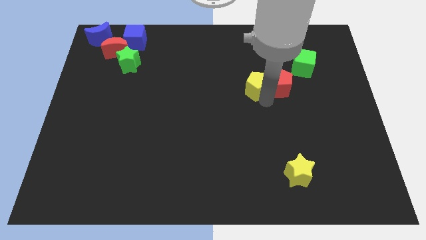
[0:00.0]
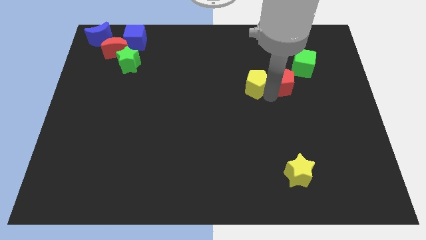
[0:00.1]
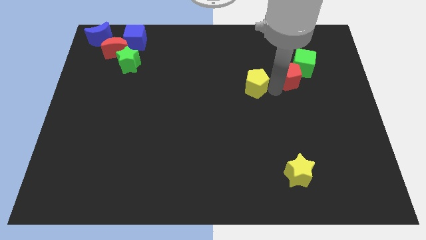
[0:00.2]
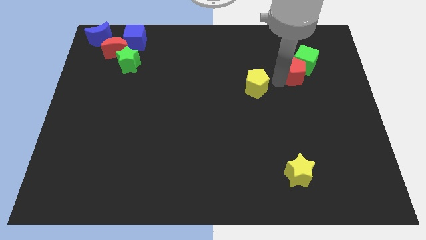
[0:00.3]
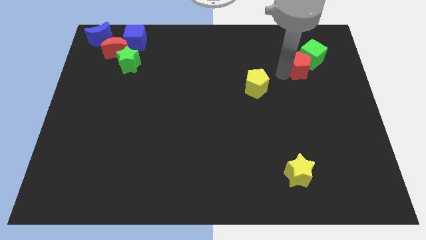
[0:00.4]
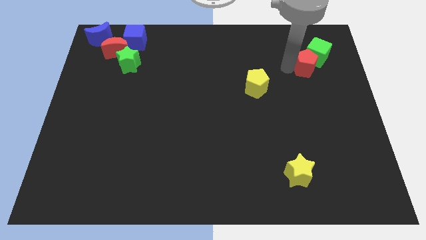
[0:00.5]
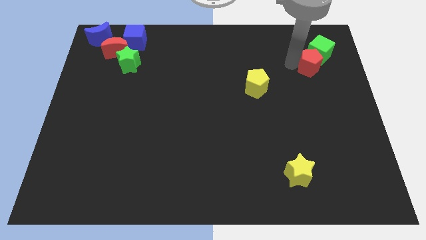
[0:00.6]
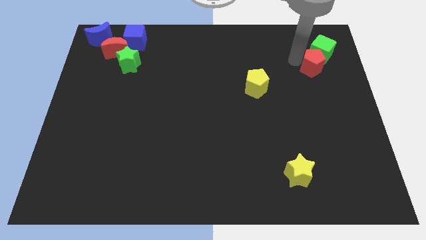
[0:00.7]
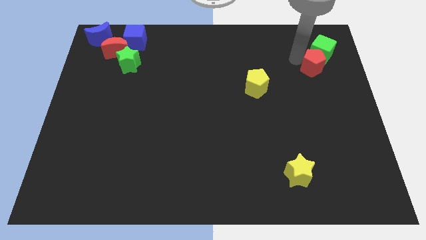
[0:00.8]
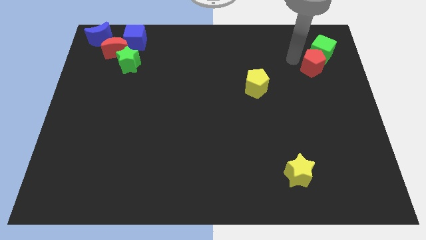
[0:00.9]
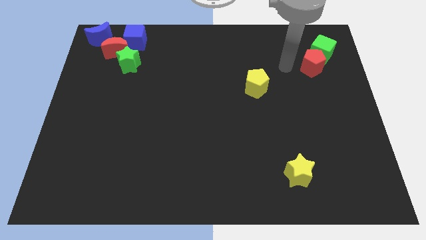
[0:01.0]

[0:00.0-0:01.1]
push red pentagon towards right upward

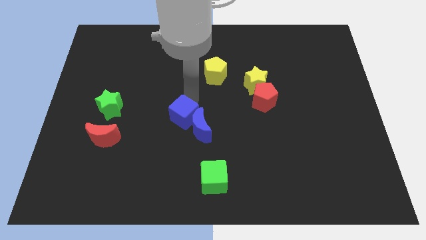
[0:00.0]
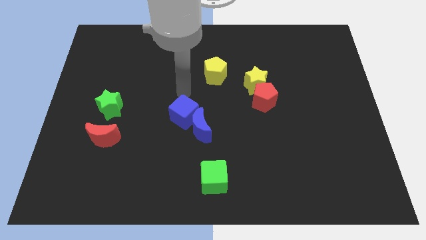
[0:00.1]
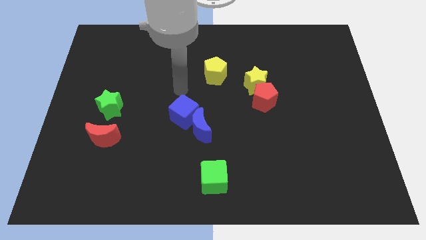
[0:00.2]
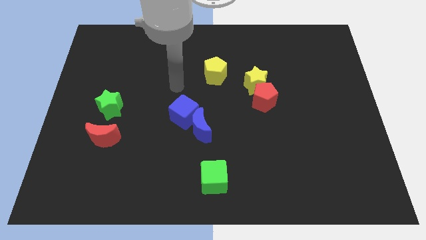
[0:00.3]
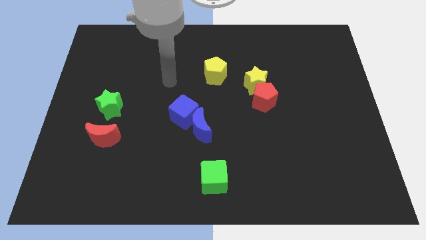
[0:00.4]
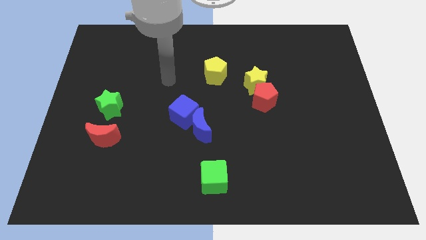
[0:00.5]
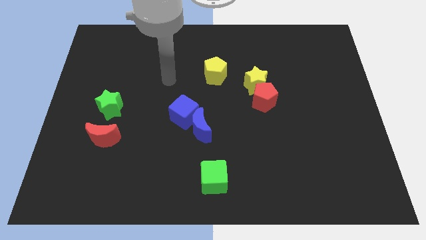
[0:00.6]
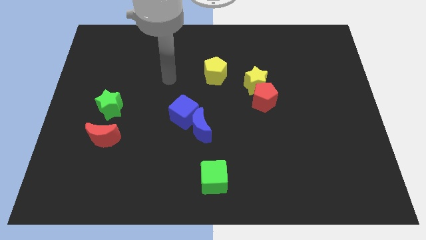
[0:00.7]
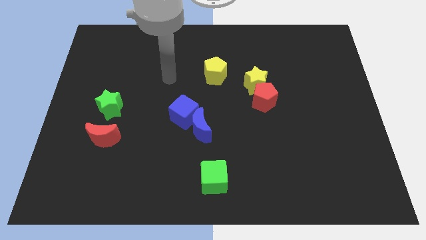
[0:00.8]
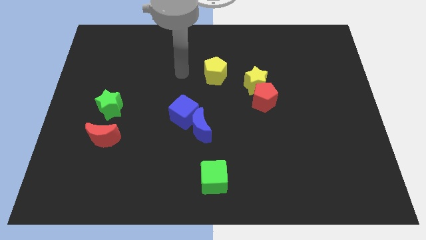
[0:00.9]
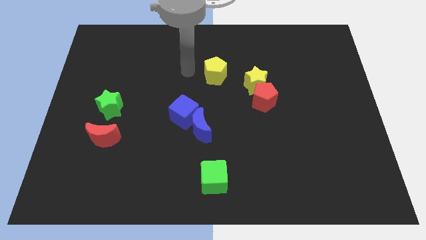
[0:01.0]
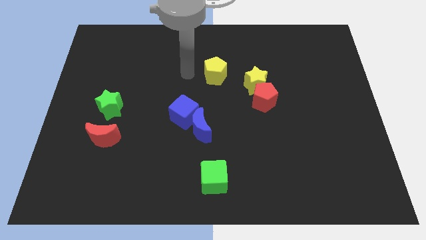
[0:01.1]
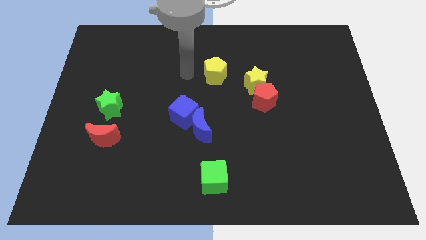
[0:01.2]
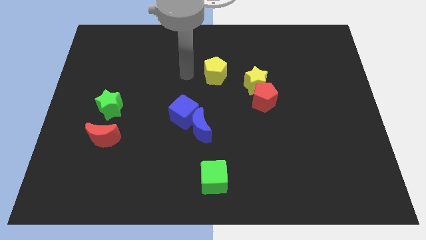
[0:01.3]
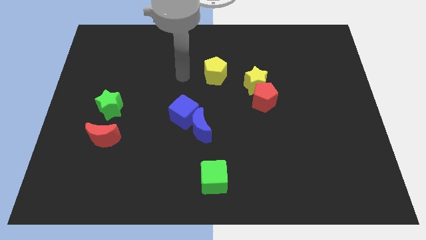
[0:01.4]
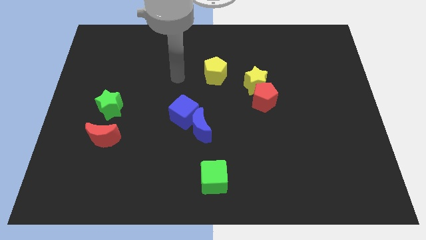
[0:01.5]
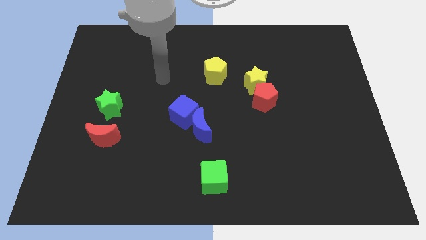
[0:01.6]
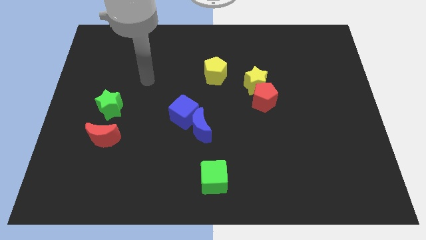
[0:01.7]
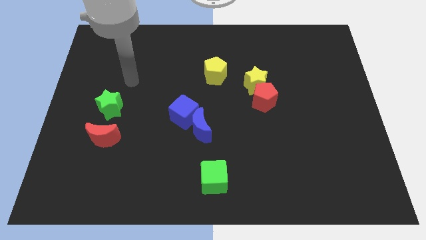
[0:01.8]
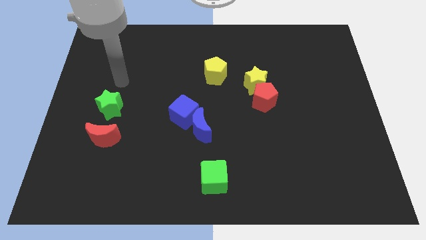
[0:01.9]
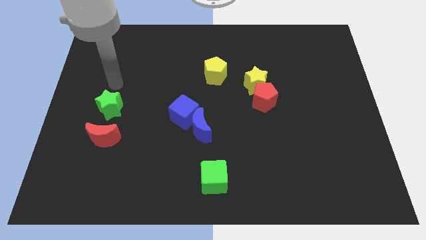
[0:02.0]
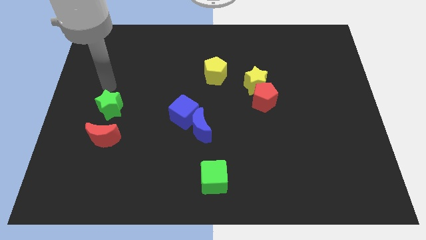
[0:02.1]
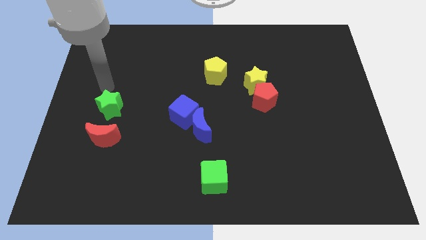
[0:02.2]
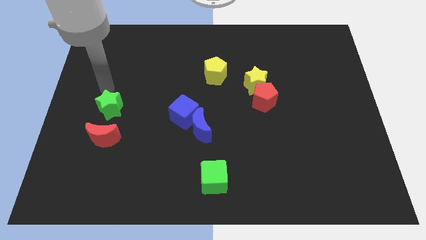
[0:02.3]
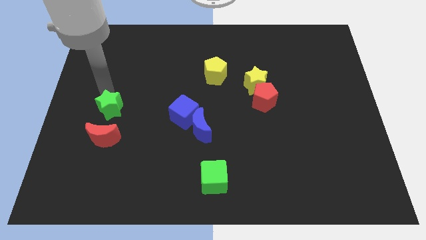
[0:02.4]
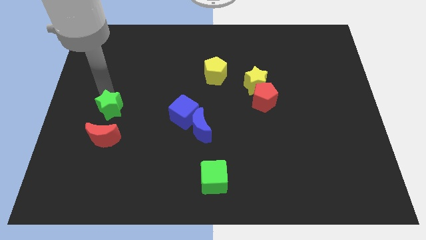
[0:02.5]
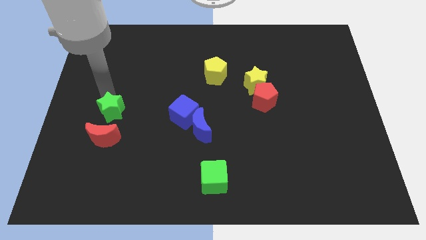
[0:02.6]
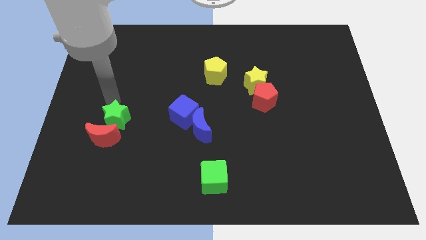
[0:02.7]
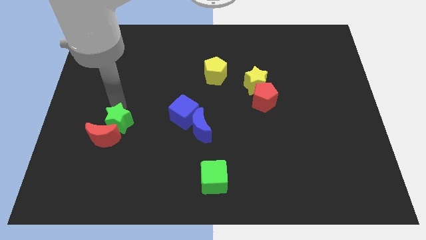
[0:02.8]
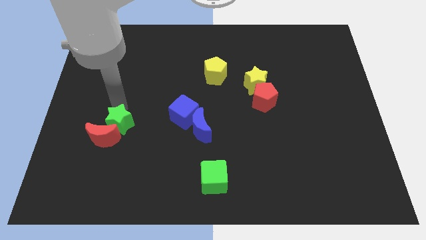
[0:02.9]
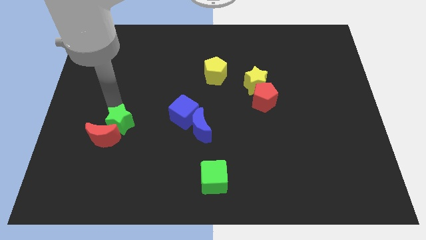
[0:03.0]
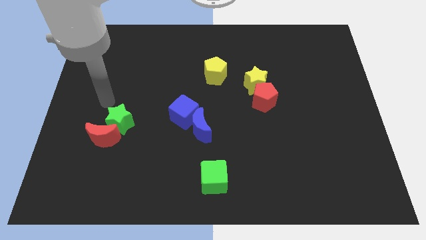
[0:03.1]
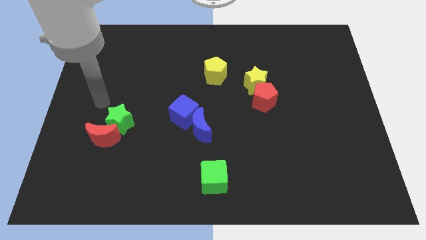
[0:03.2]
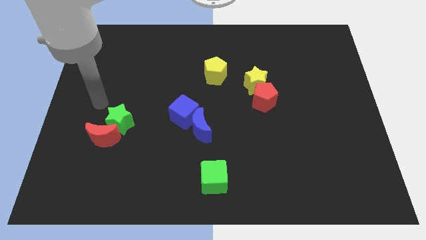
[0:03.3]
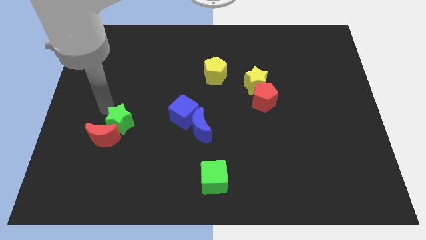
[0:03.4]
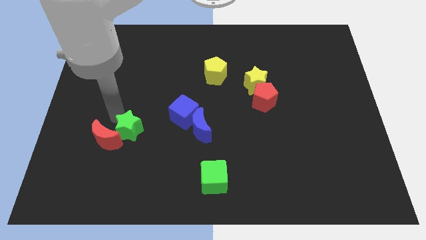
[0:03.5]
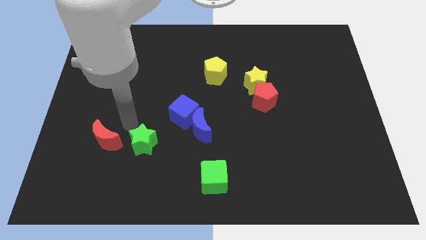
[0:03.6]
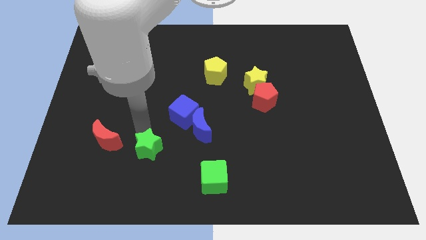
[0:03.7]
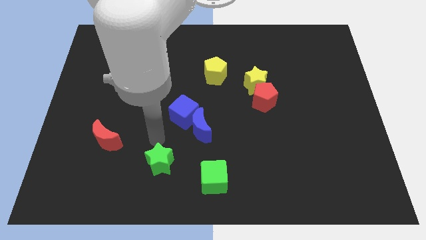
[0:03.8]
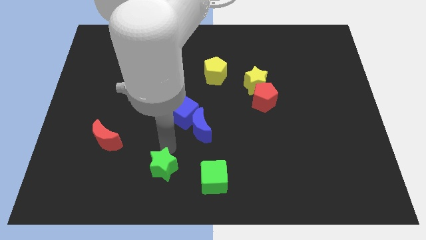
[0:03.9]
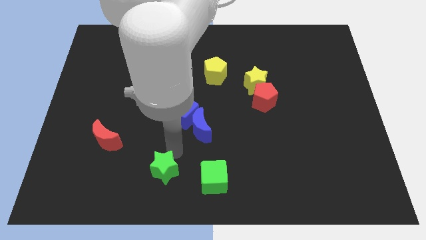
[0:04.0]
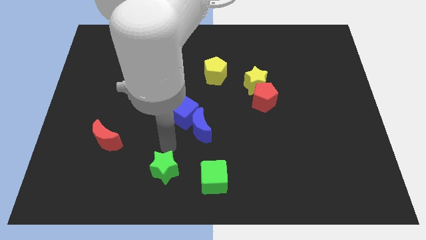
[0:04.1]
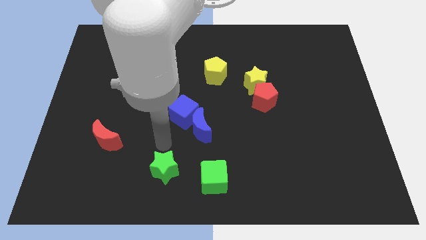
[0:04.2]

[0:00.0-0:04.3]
move the green star towards the left side of the green cube

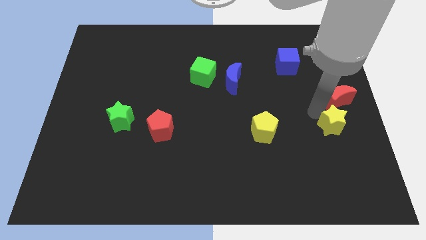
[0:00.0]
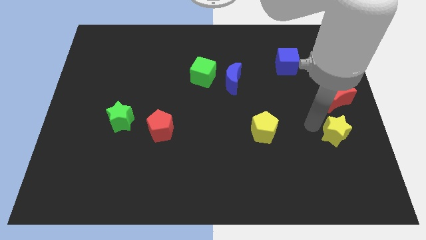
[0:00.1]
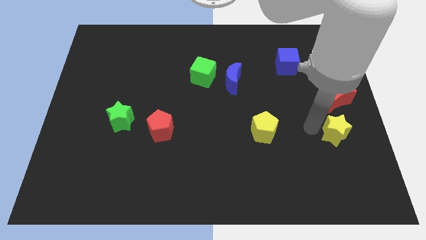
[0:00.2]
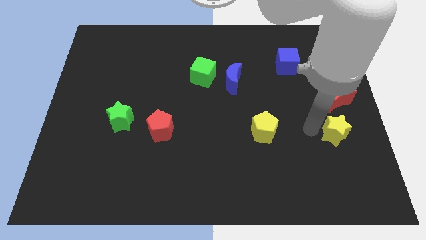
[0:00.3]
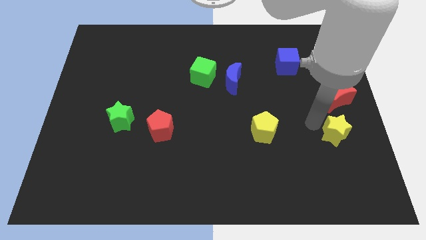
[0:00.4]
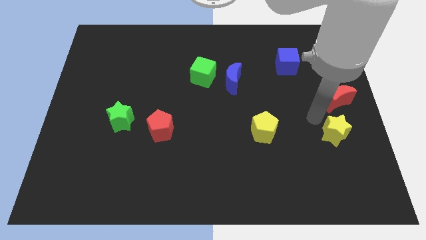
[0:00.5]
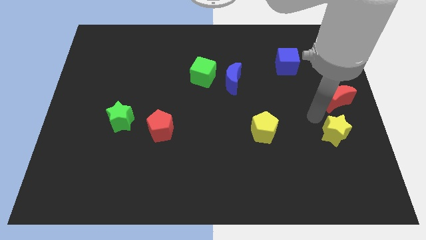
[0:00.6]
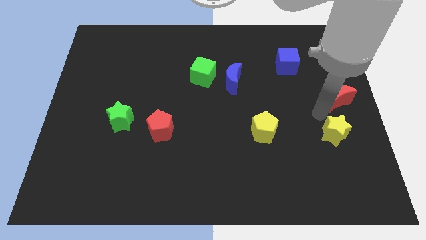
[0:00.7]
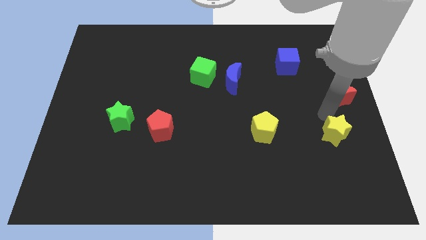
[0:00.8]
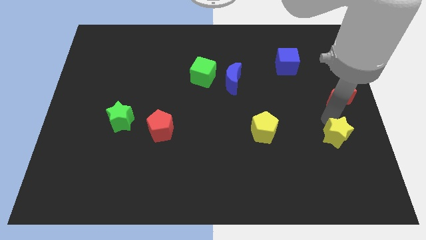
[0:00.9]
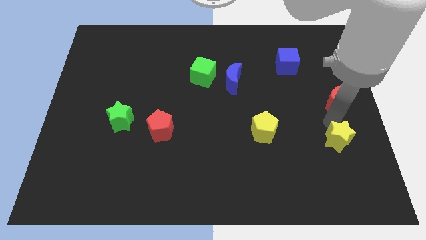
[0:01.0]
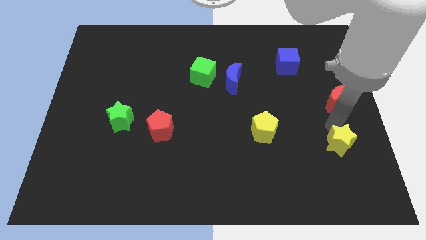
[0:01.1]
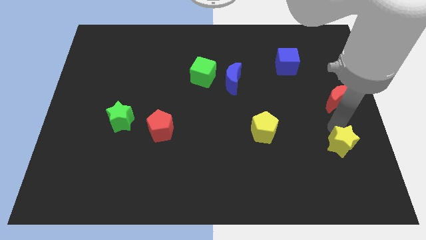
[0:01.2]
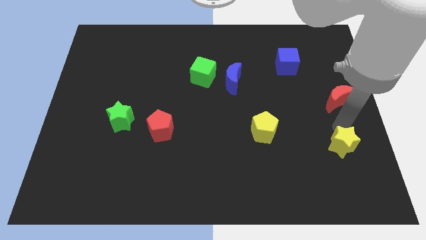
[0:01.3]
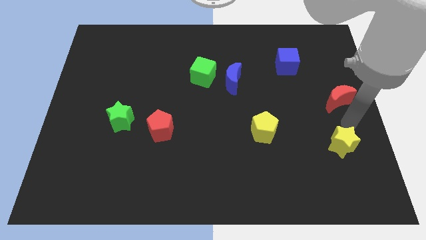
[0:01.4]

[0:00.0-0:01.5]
separate the red moon and yellow star

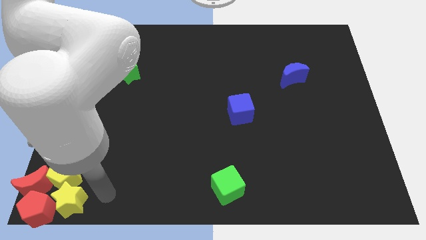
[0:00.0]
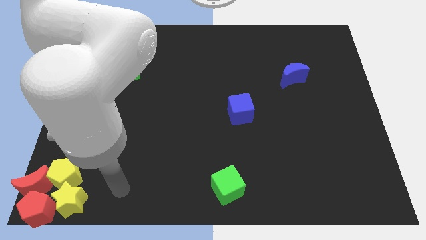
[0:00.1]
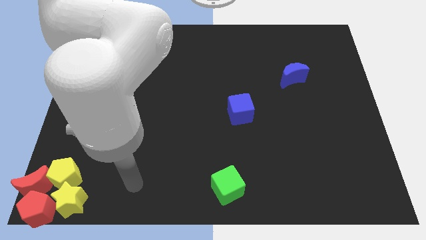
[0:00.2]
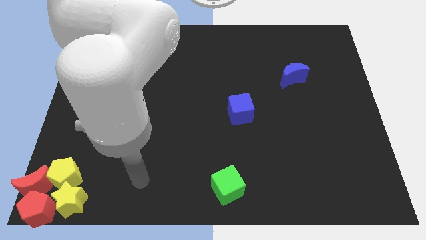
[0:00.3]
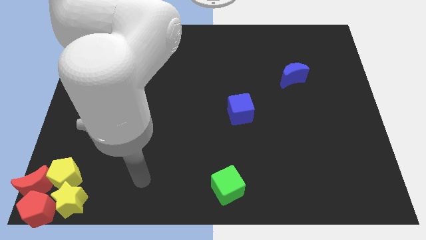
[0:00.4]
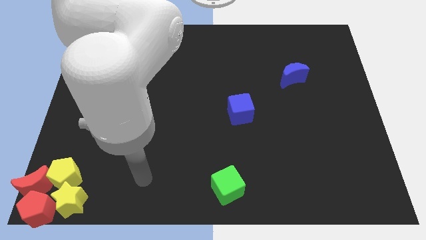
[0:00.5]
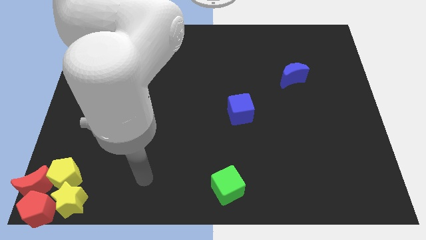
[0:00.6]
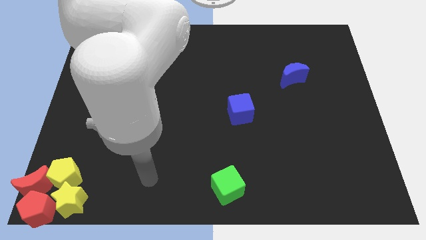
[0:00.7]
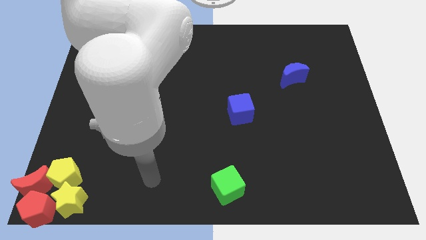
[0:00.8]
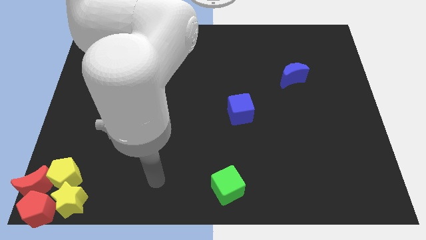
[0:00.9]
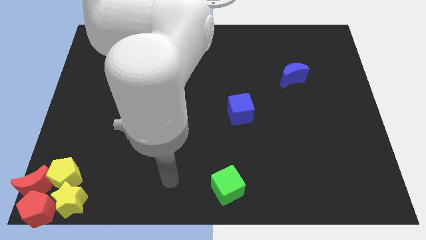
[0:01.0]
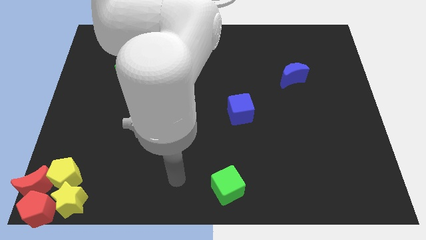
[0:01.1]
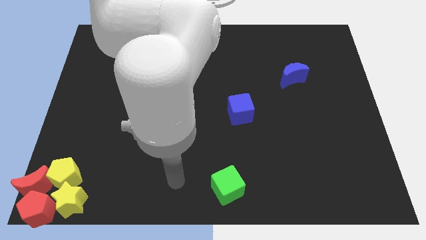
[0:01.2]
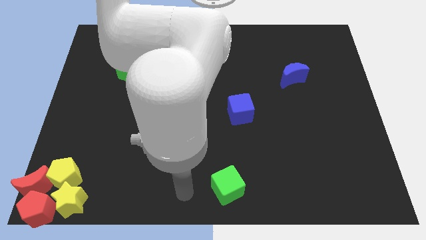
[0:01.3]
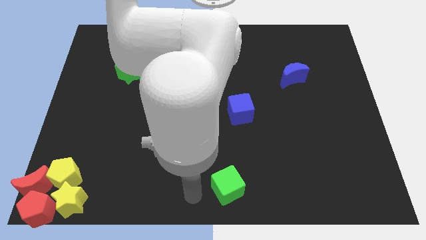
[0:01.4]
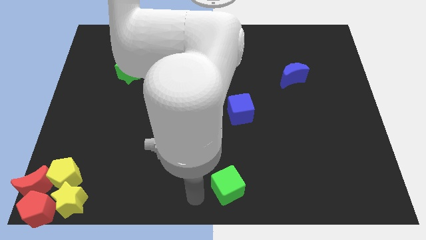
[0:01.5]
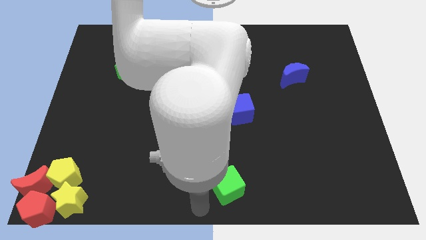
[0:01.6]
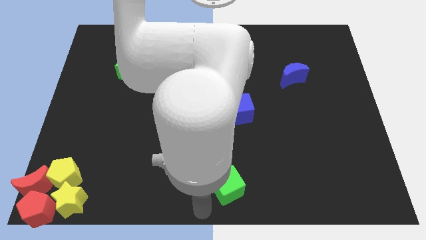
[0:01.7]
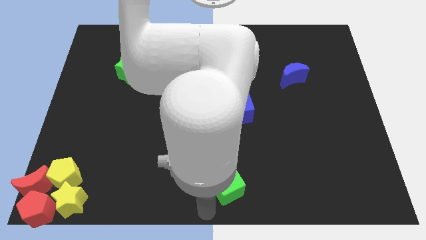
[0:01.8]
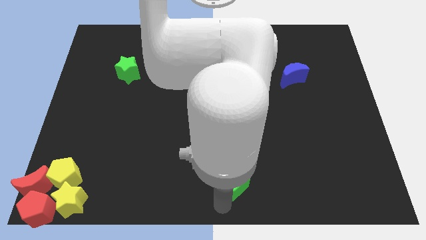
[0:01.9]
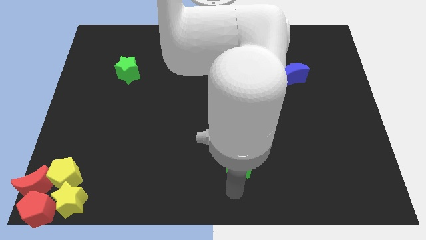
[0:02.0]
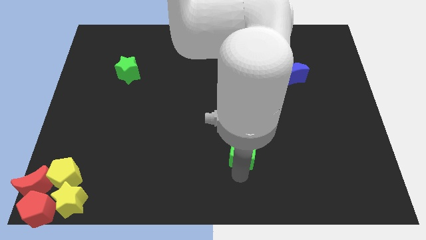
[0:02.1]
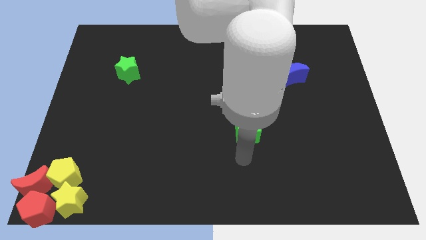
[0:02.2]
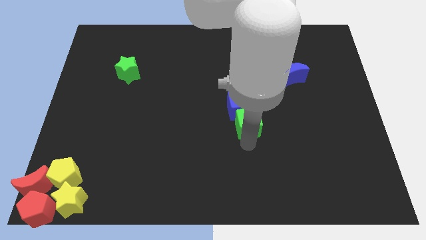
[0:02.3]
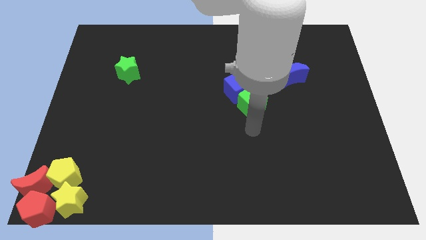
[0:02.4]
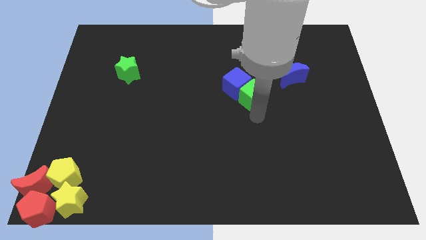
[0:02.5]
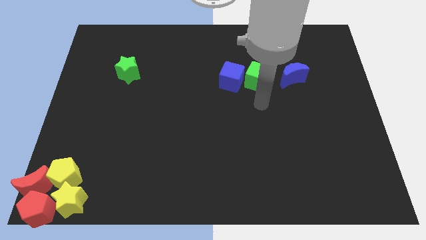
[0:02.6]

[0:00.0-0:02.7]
push the green cube into blue cube
